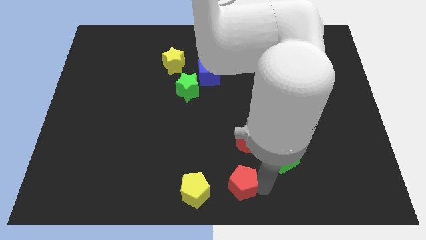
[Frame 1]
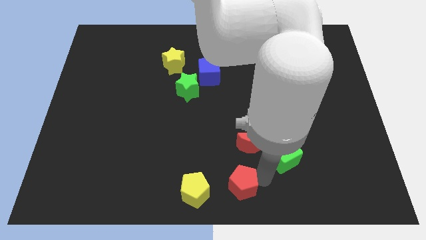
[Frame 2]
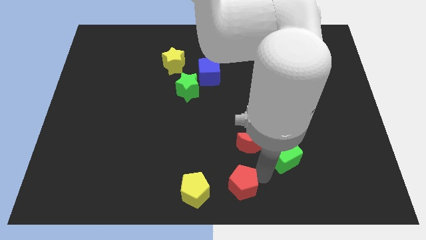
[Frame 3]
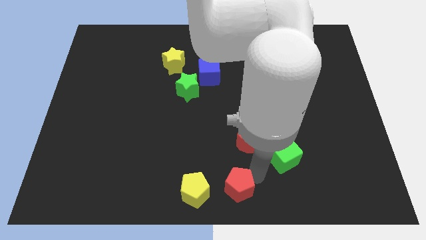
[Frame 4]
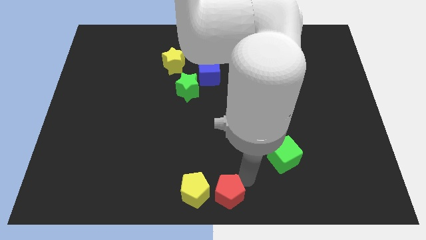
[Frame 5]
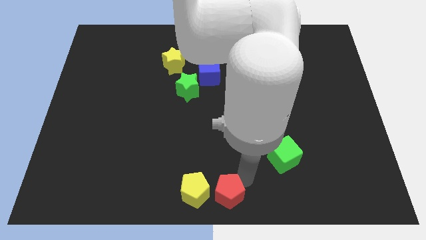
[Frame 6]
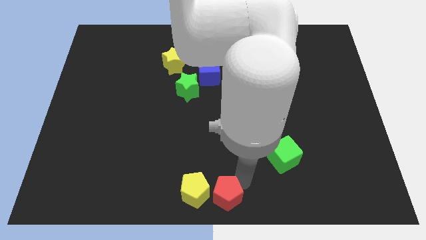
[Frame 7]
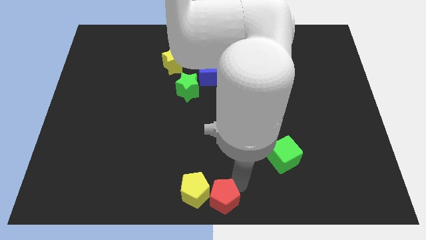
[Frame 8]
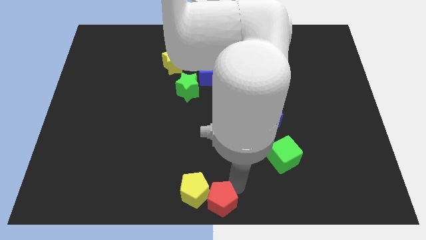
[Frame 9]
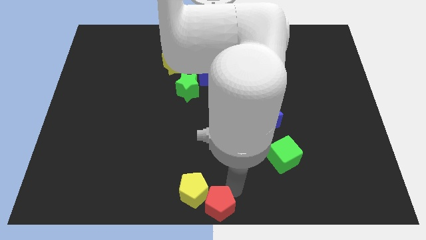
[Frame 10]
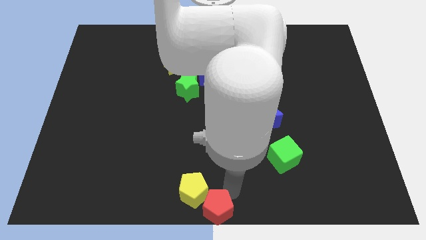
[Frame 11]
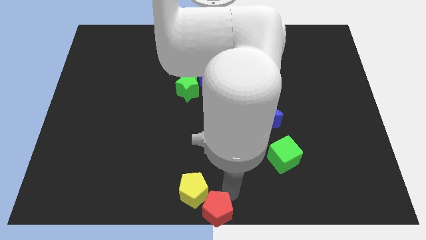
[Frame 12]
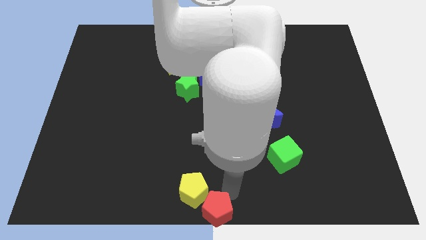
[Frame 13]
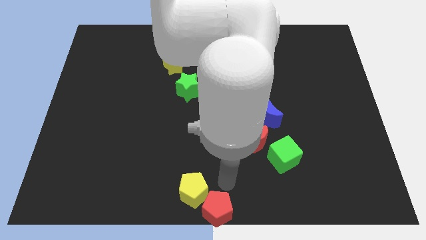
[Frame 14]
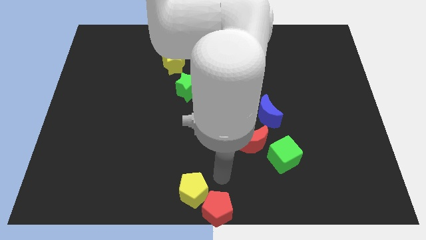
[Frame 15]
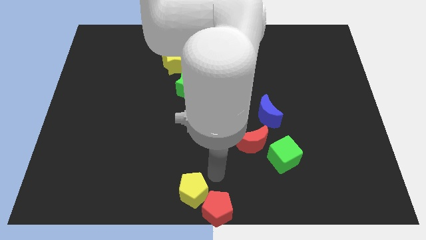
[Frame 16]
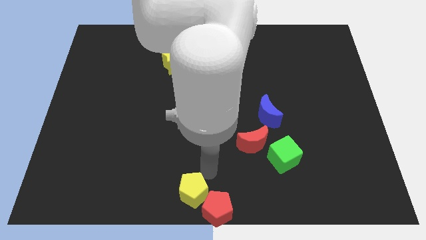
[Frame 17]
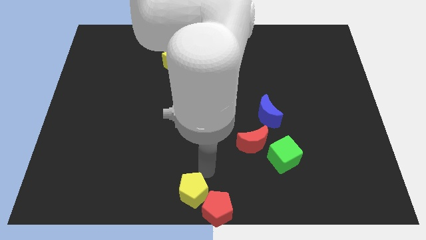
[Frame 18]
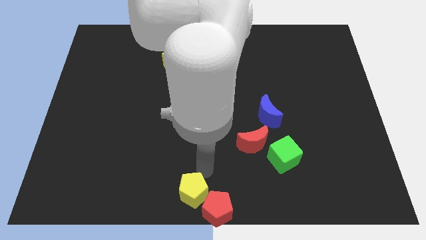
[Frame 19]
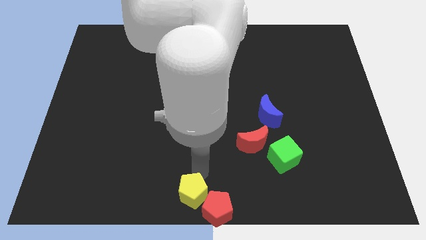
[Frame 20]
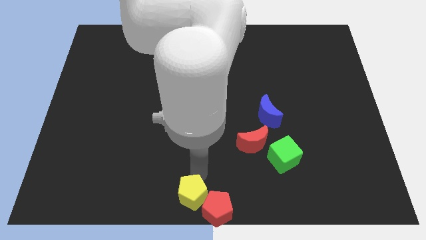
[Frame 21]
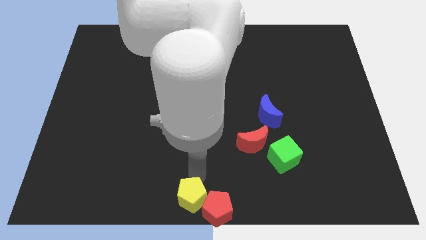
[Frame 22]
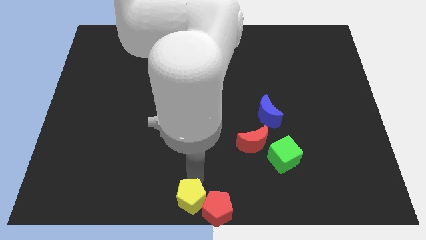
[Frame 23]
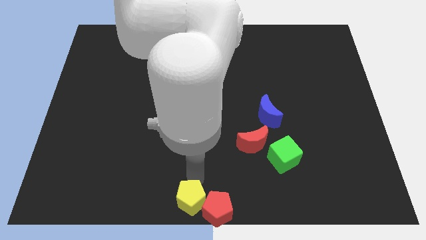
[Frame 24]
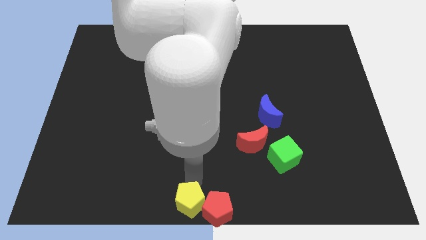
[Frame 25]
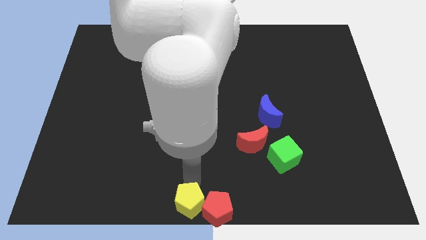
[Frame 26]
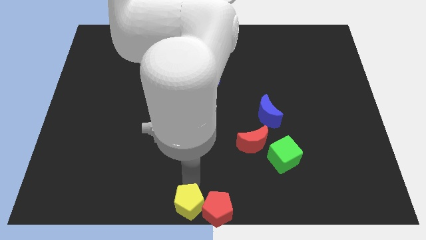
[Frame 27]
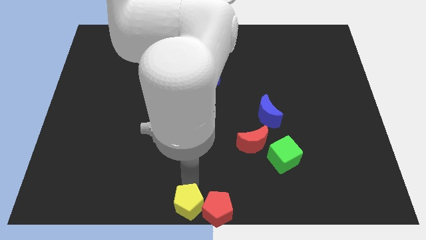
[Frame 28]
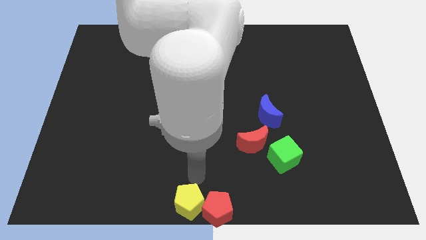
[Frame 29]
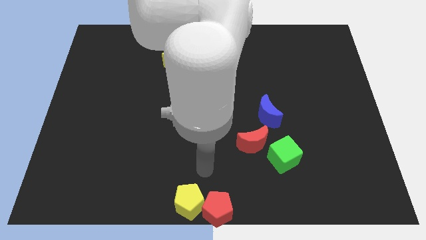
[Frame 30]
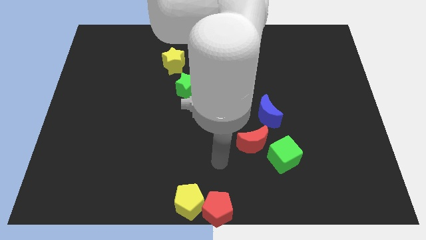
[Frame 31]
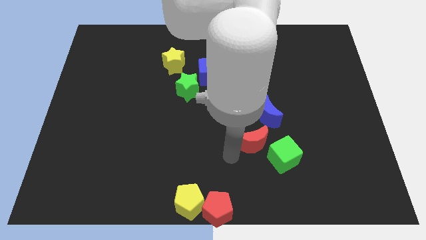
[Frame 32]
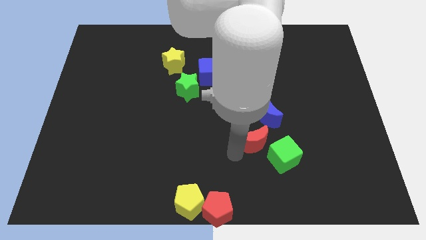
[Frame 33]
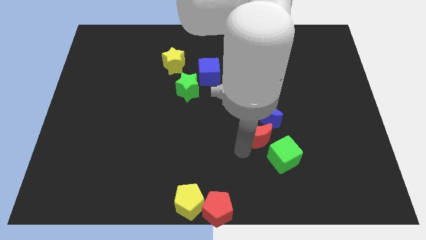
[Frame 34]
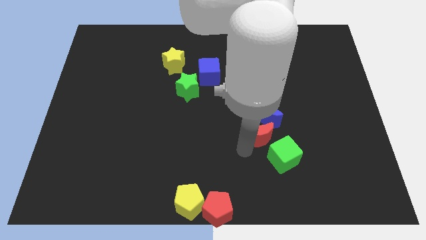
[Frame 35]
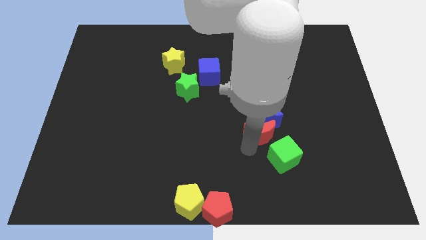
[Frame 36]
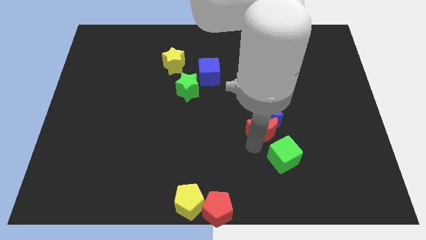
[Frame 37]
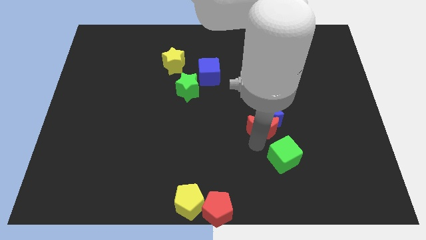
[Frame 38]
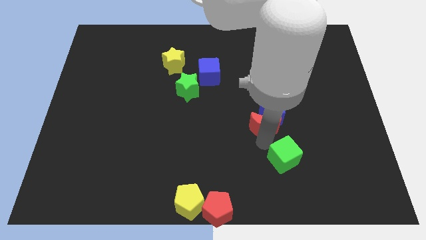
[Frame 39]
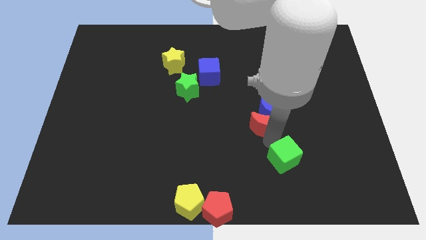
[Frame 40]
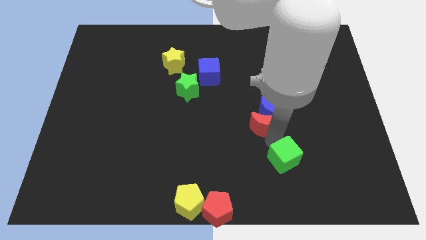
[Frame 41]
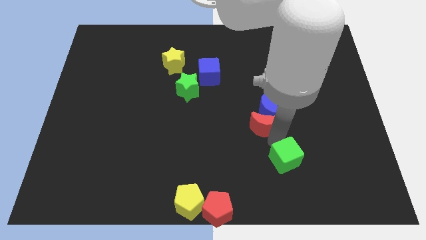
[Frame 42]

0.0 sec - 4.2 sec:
place the yellow pentagon left to the red pentagon

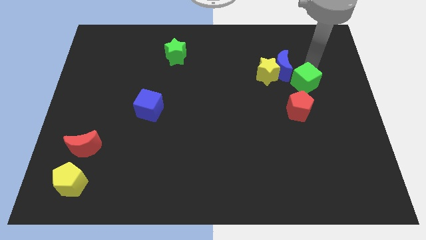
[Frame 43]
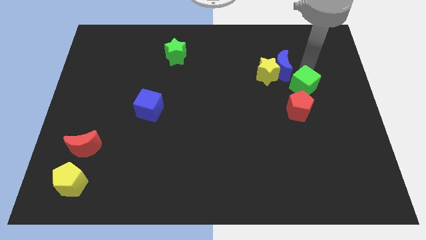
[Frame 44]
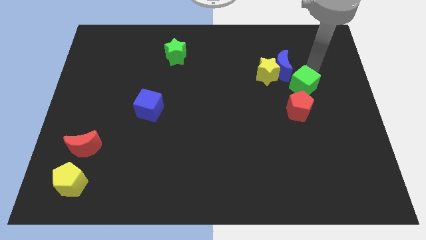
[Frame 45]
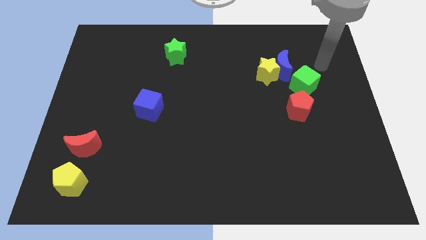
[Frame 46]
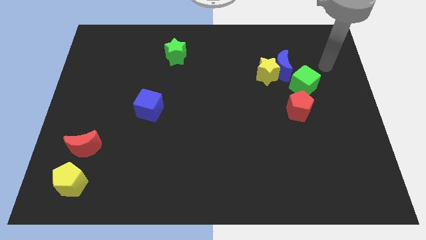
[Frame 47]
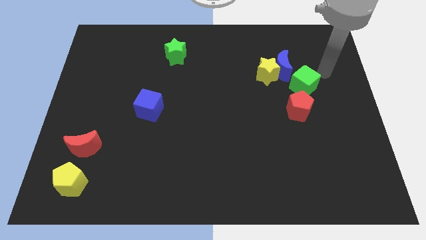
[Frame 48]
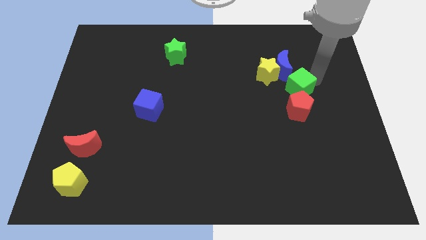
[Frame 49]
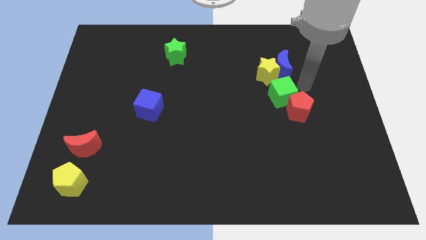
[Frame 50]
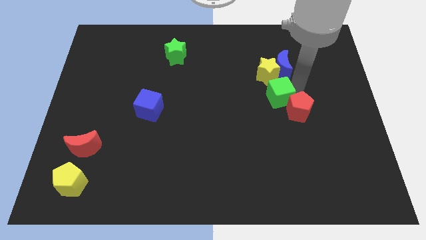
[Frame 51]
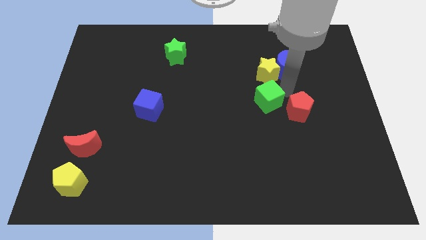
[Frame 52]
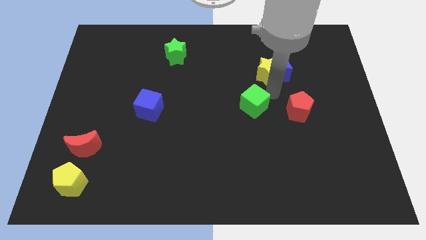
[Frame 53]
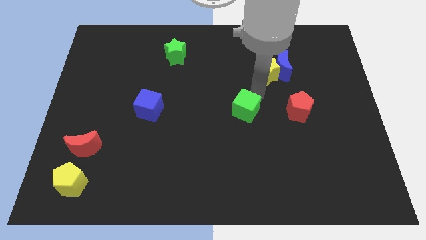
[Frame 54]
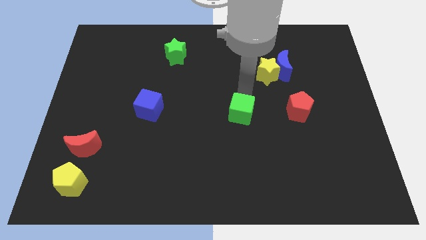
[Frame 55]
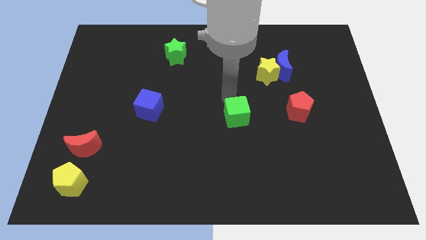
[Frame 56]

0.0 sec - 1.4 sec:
place the green cube in between red pentagon and blue cube

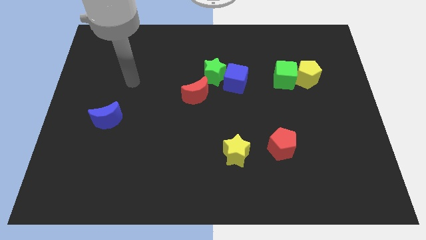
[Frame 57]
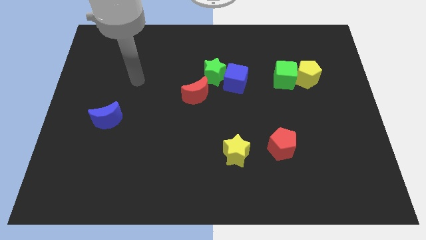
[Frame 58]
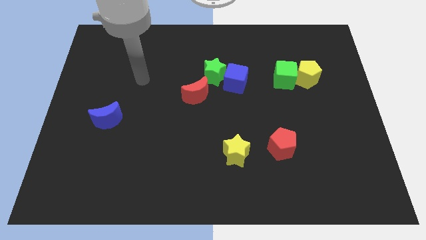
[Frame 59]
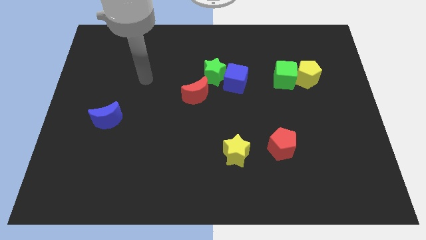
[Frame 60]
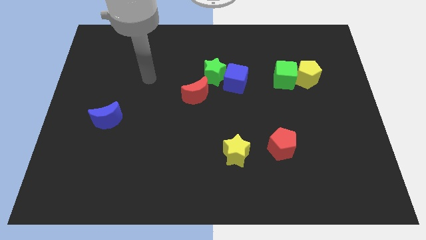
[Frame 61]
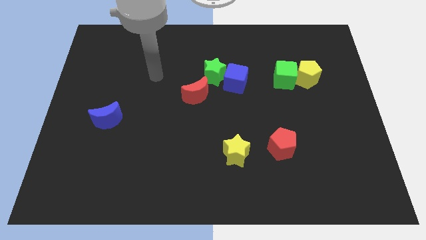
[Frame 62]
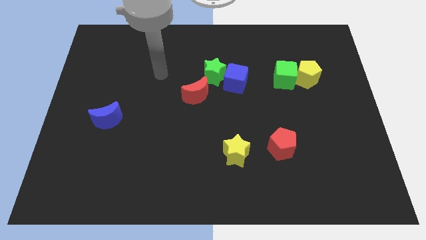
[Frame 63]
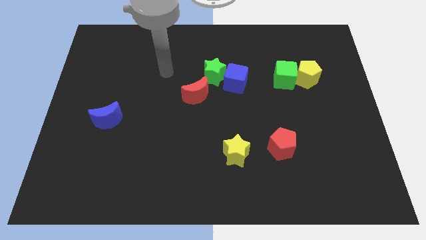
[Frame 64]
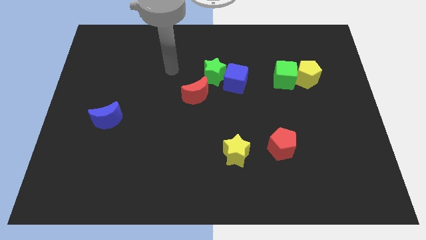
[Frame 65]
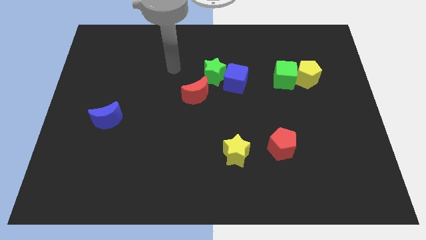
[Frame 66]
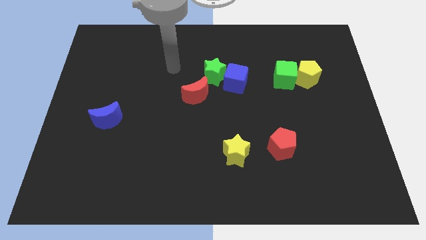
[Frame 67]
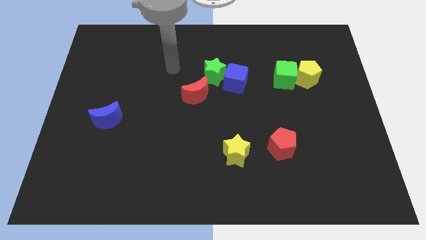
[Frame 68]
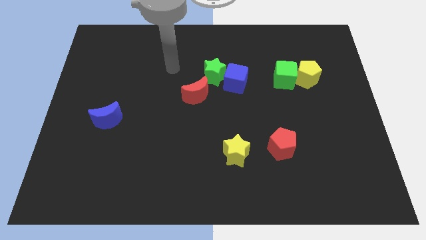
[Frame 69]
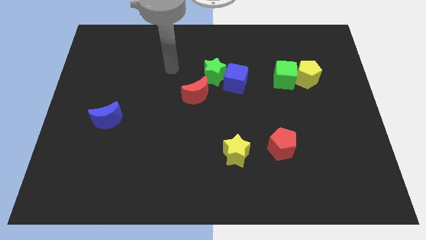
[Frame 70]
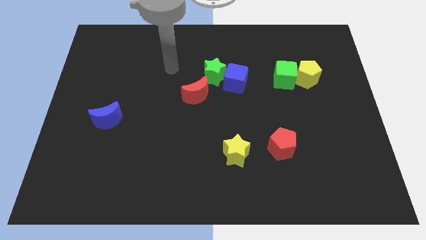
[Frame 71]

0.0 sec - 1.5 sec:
place arm above red moon

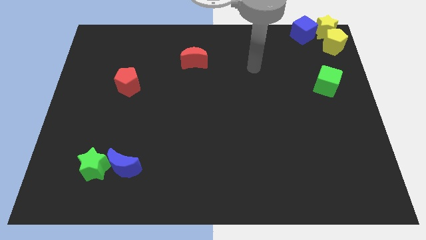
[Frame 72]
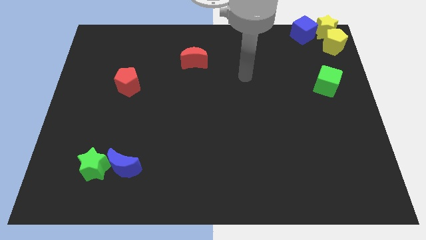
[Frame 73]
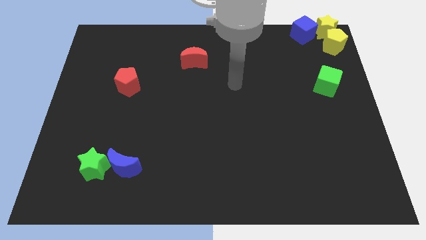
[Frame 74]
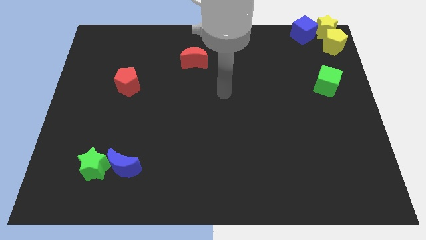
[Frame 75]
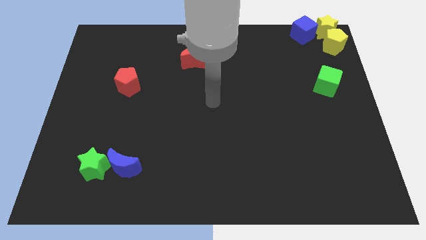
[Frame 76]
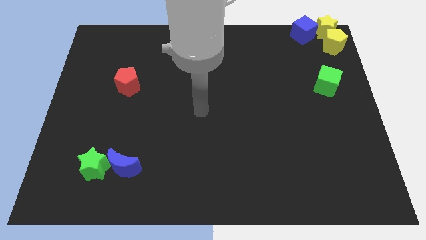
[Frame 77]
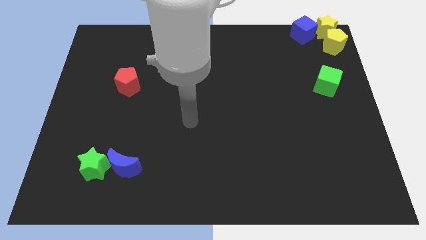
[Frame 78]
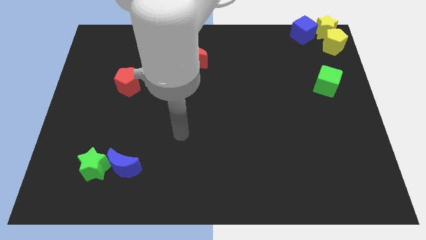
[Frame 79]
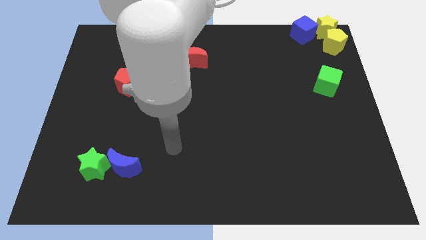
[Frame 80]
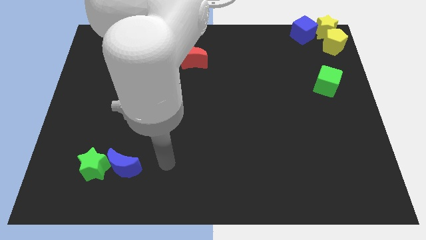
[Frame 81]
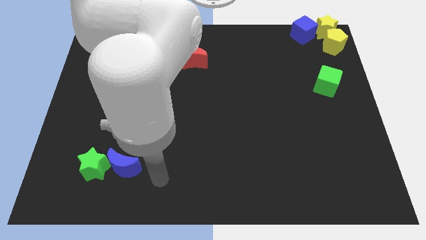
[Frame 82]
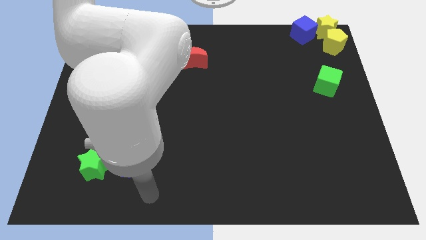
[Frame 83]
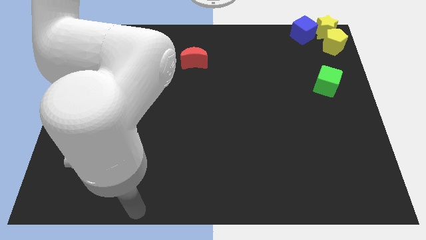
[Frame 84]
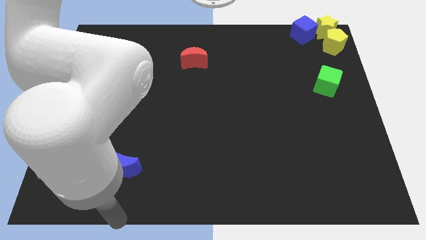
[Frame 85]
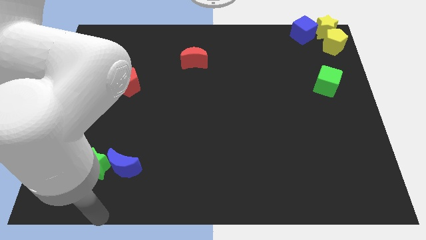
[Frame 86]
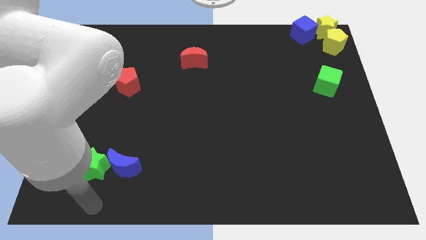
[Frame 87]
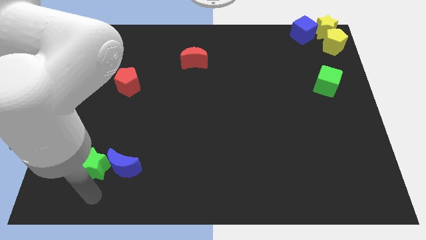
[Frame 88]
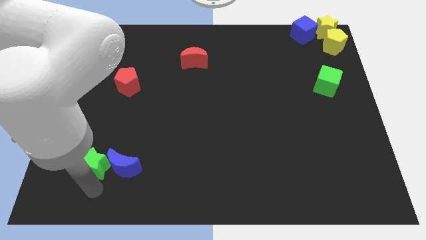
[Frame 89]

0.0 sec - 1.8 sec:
move the arm at the bottom of the green star
